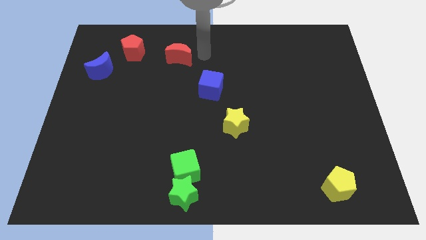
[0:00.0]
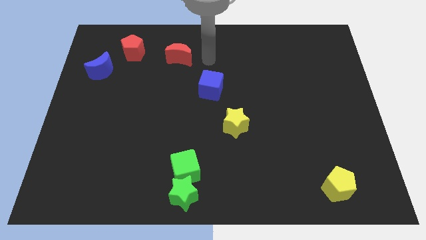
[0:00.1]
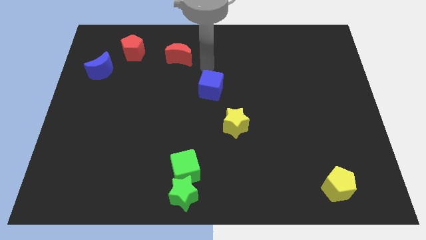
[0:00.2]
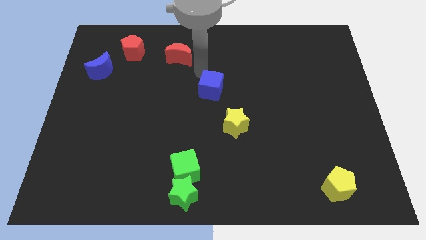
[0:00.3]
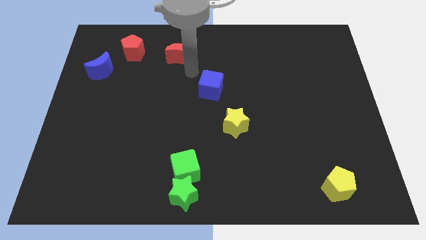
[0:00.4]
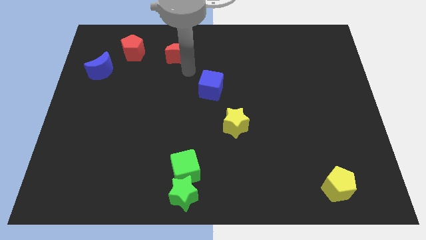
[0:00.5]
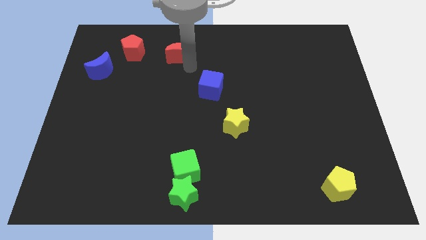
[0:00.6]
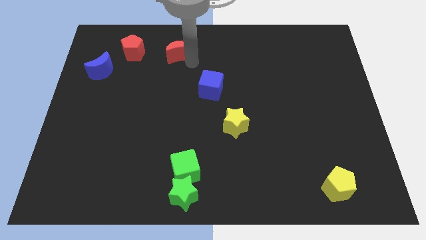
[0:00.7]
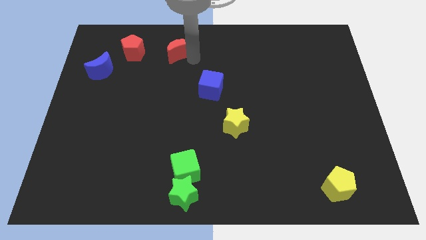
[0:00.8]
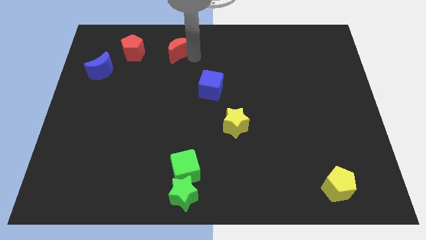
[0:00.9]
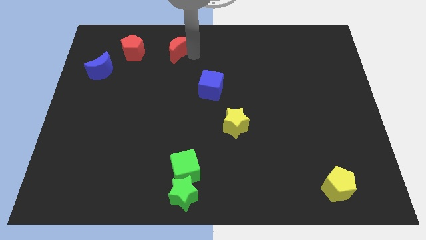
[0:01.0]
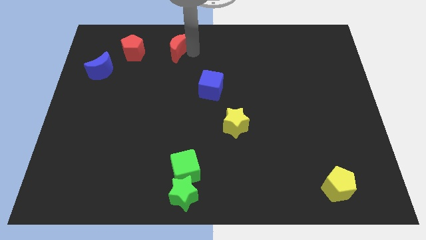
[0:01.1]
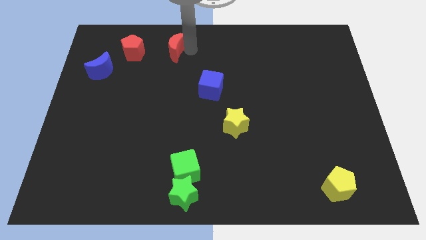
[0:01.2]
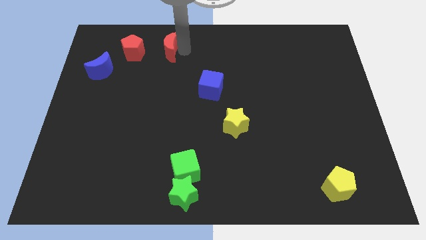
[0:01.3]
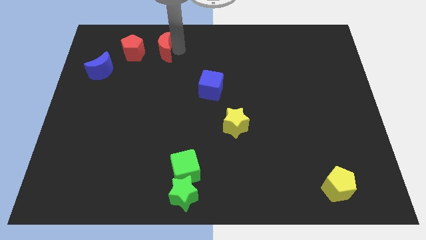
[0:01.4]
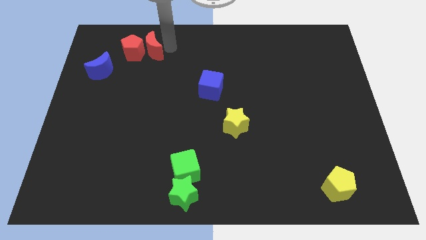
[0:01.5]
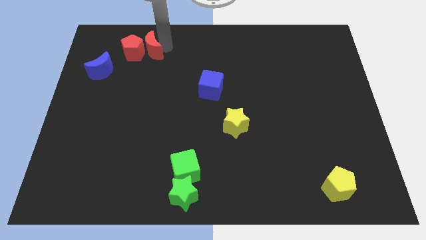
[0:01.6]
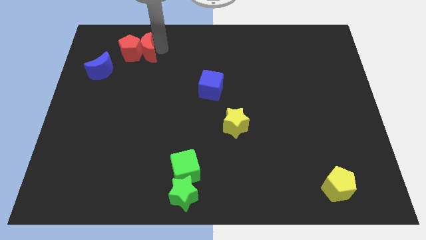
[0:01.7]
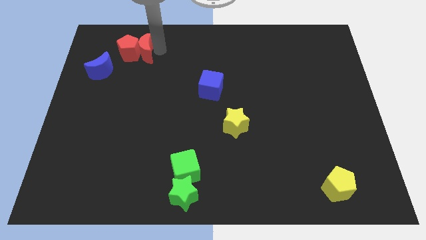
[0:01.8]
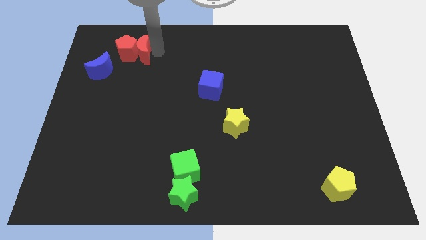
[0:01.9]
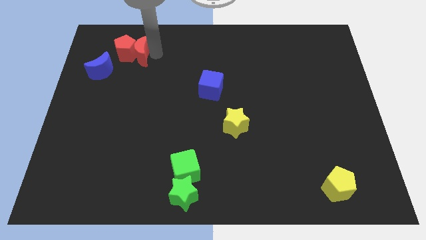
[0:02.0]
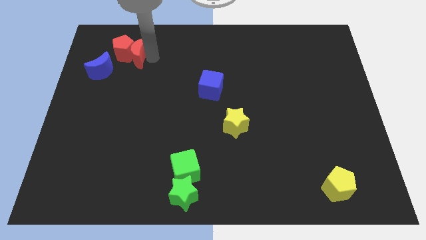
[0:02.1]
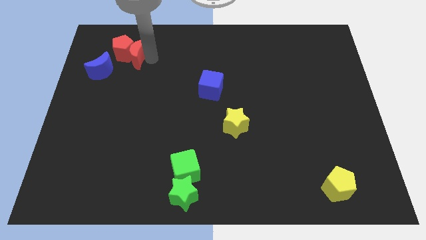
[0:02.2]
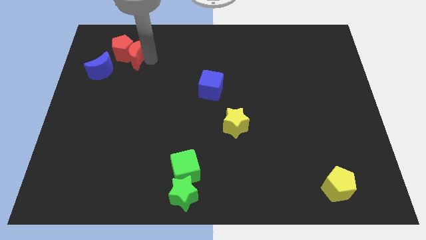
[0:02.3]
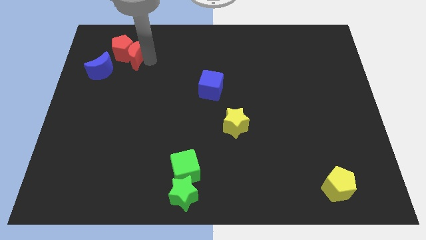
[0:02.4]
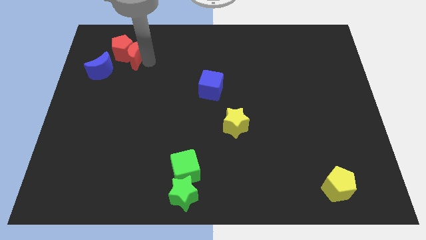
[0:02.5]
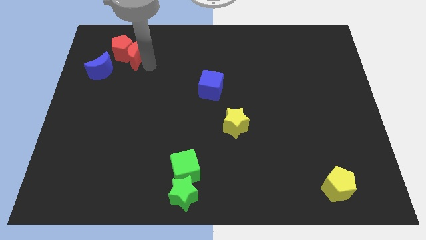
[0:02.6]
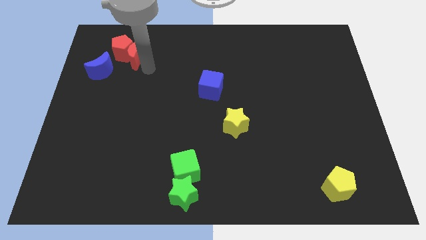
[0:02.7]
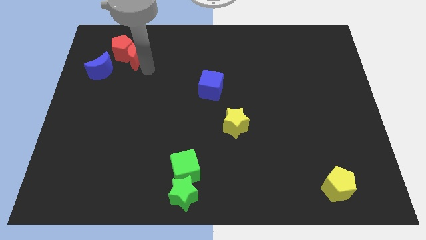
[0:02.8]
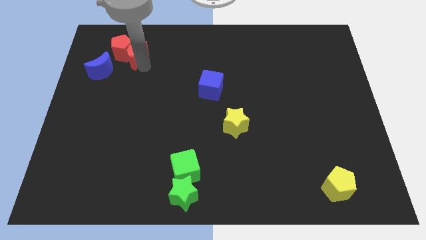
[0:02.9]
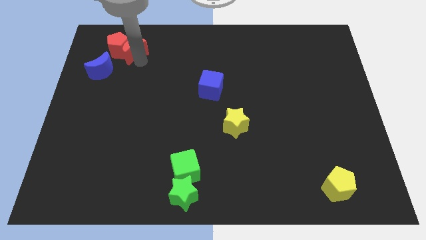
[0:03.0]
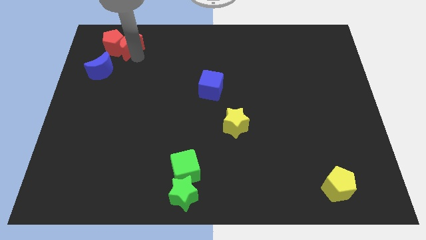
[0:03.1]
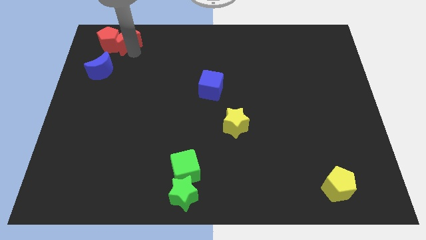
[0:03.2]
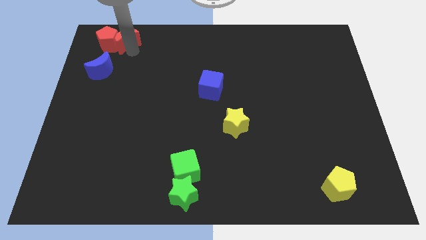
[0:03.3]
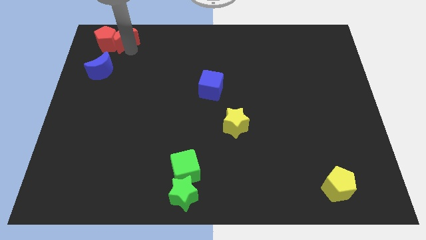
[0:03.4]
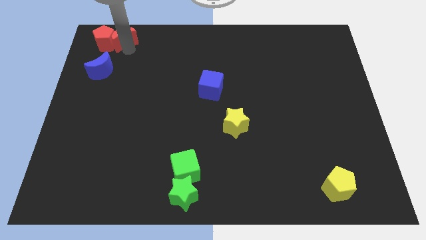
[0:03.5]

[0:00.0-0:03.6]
push the red moon with red pentagon towards top left side

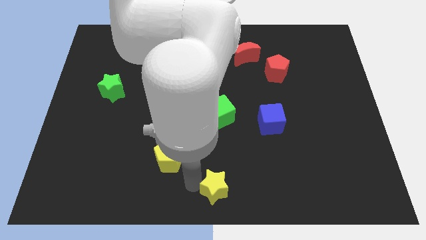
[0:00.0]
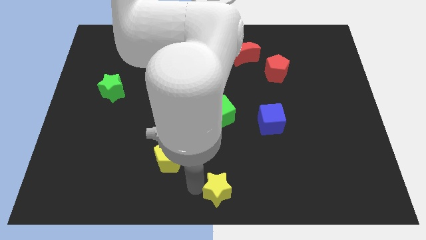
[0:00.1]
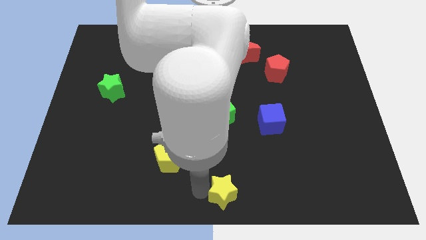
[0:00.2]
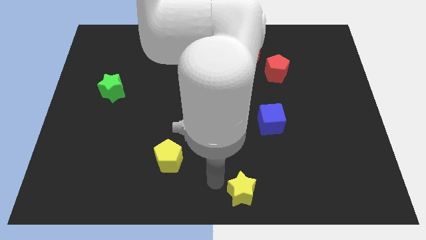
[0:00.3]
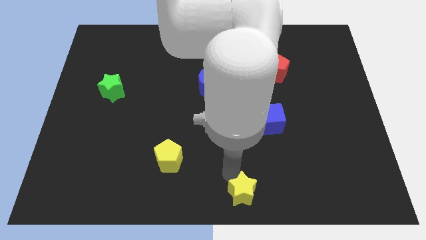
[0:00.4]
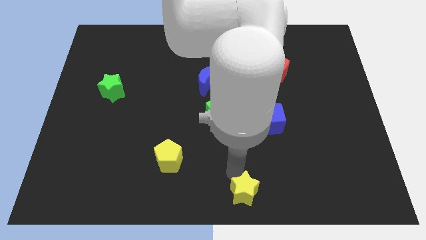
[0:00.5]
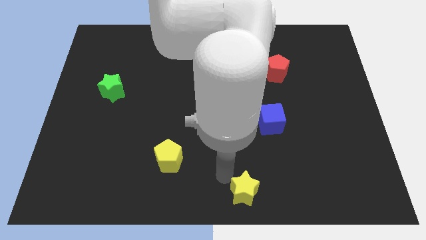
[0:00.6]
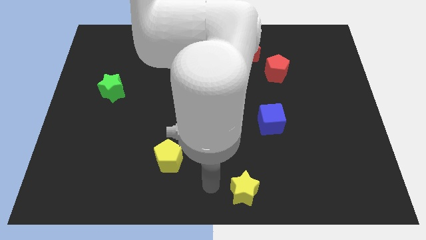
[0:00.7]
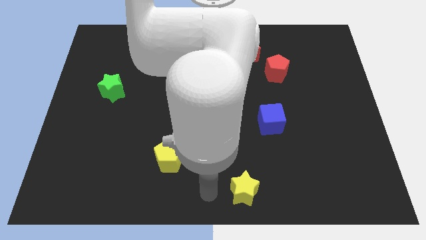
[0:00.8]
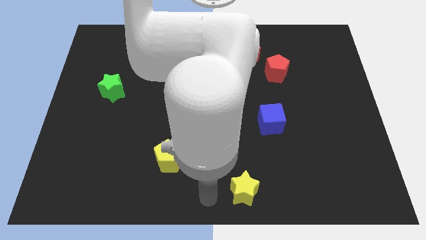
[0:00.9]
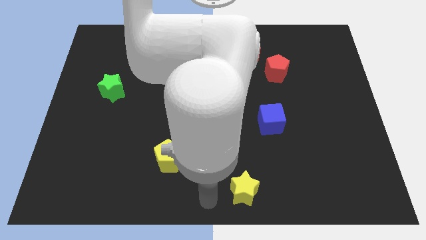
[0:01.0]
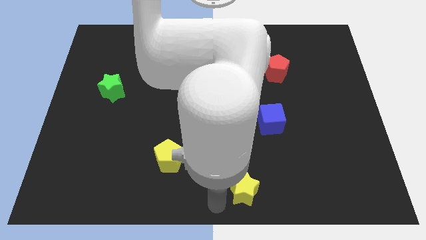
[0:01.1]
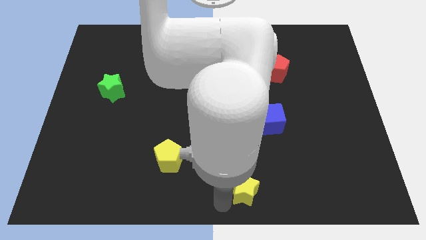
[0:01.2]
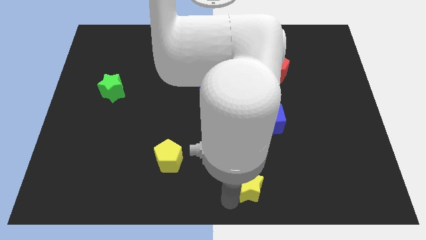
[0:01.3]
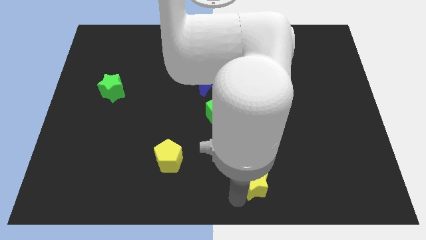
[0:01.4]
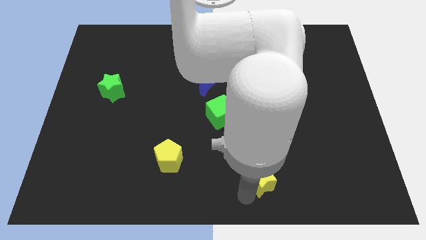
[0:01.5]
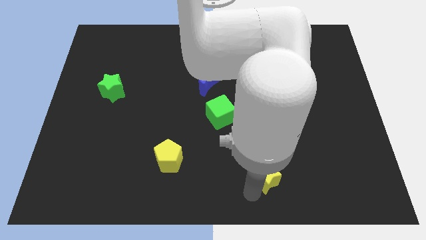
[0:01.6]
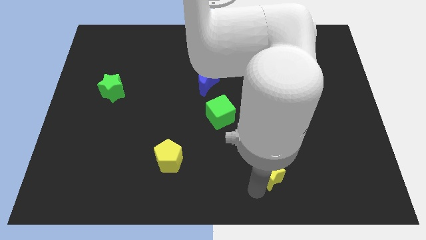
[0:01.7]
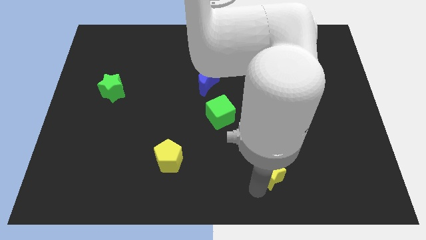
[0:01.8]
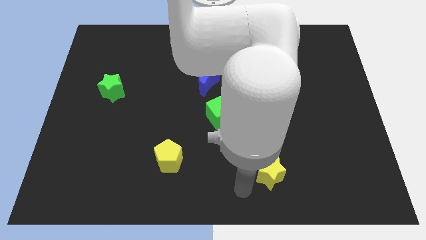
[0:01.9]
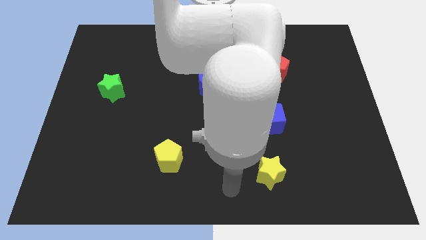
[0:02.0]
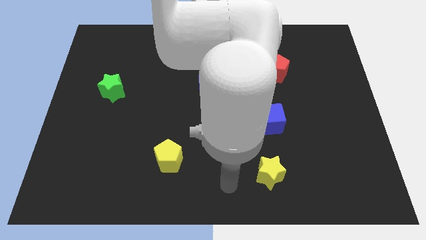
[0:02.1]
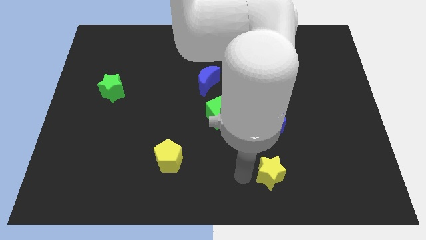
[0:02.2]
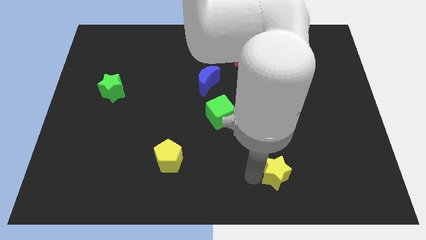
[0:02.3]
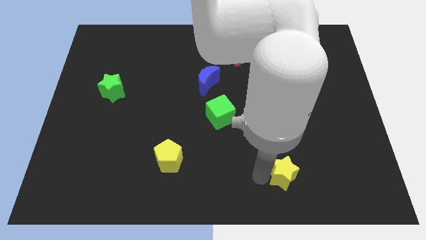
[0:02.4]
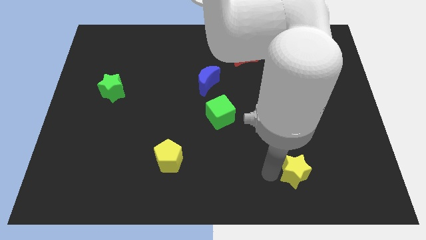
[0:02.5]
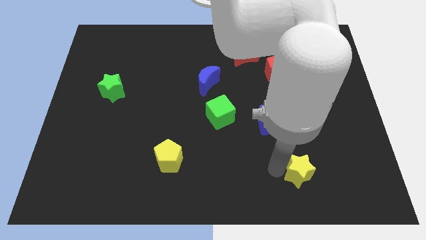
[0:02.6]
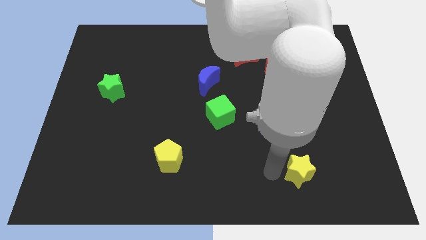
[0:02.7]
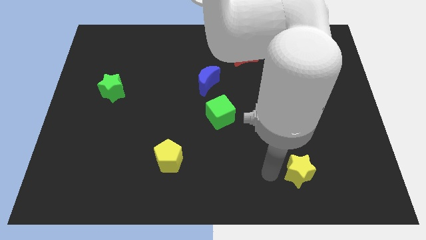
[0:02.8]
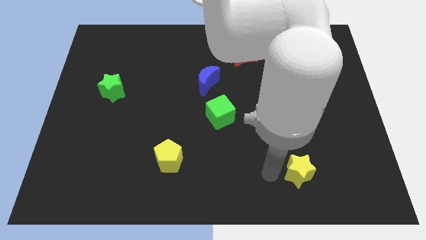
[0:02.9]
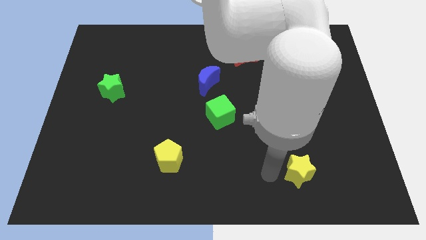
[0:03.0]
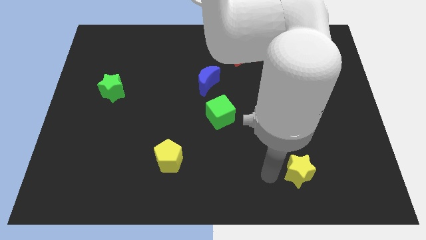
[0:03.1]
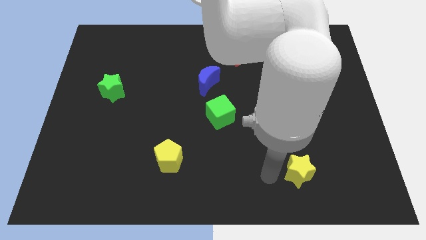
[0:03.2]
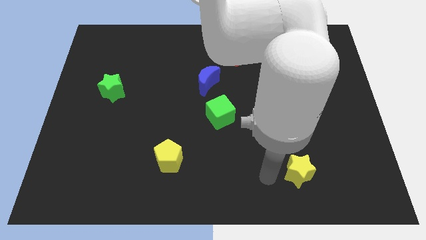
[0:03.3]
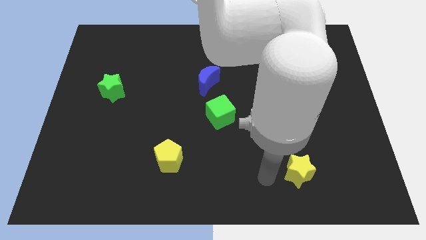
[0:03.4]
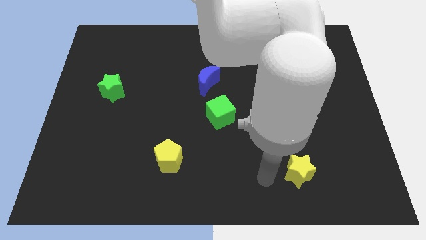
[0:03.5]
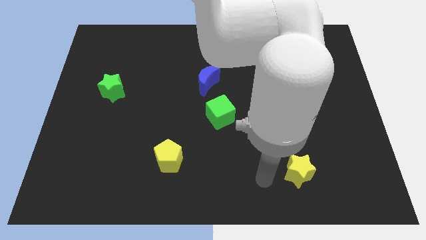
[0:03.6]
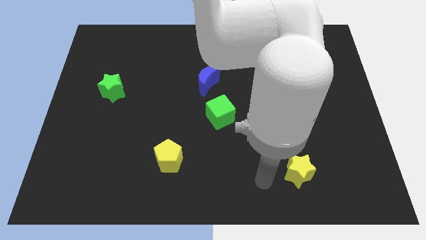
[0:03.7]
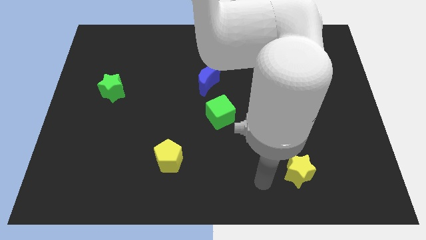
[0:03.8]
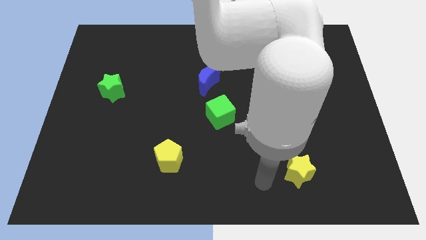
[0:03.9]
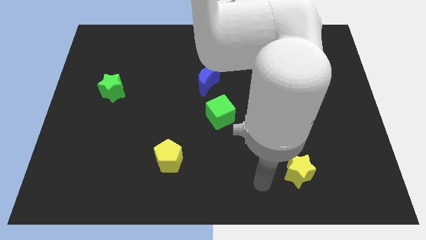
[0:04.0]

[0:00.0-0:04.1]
slide yellow star to the right of yellow pentagon

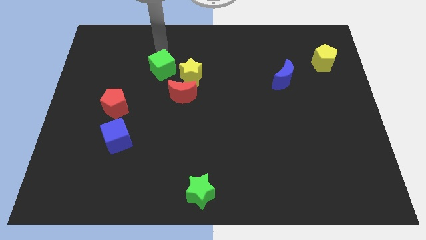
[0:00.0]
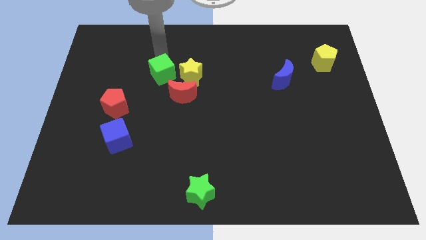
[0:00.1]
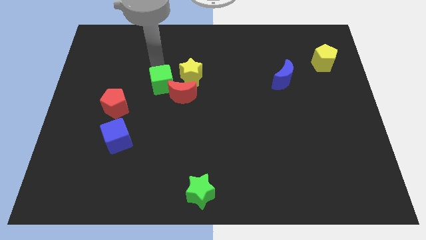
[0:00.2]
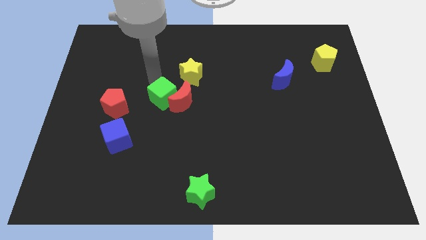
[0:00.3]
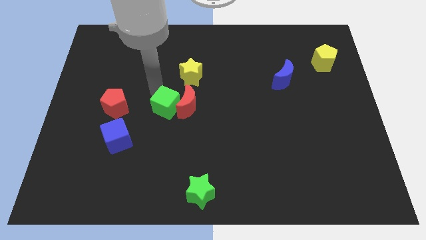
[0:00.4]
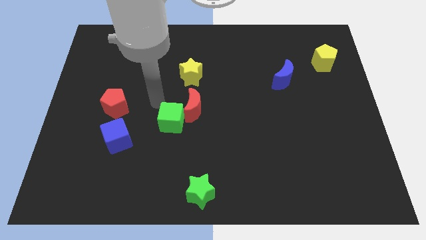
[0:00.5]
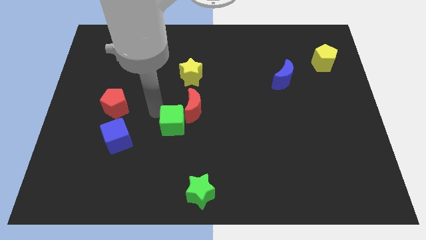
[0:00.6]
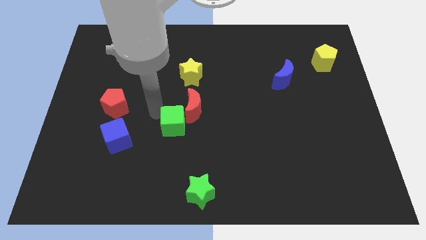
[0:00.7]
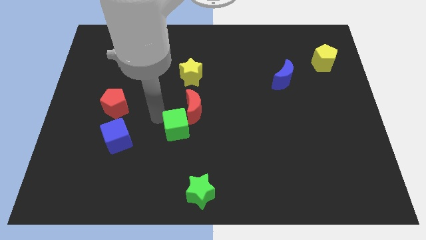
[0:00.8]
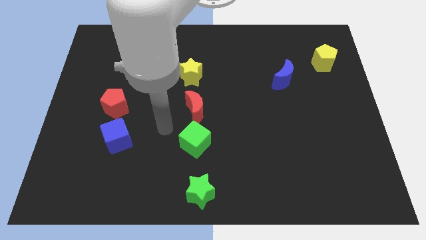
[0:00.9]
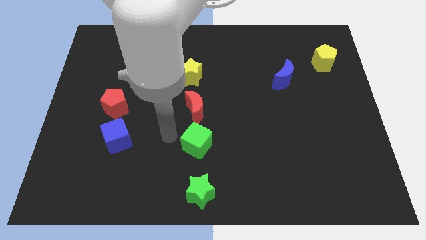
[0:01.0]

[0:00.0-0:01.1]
put the green cube at the bottom side of the red crescent

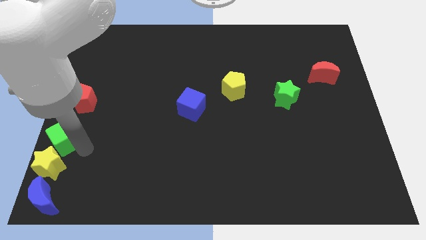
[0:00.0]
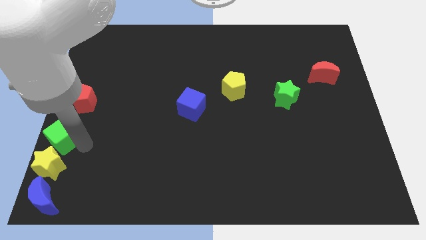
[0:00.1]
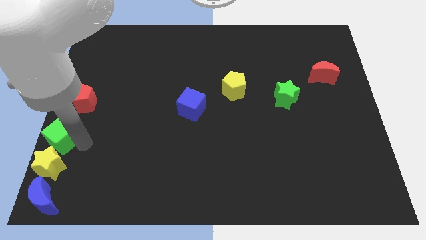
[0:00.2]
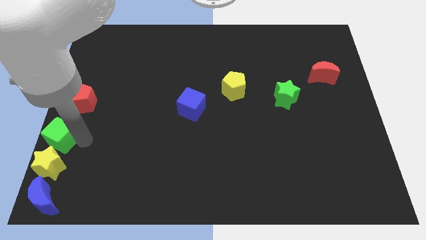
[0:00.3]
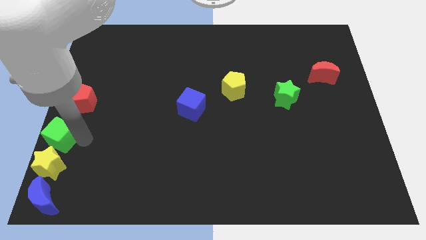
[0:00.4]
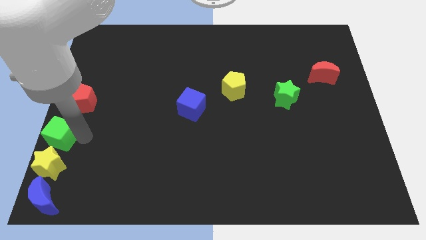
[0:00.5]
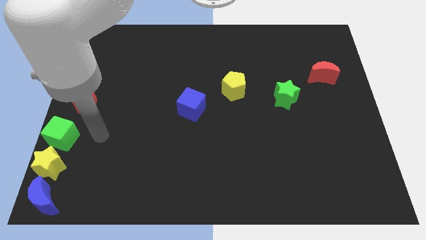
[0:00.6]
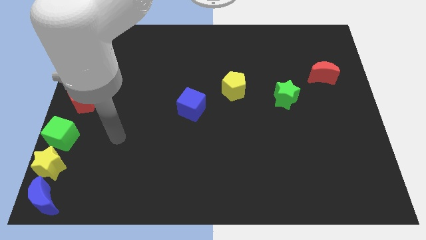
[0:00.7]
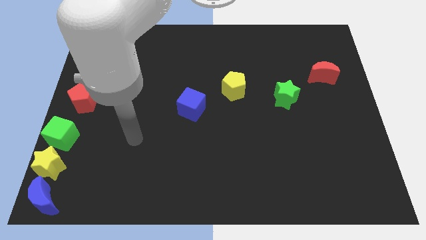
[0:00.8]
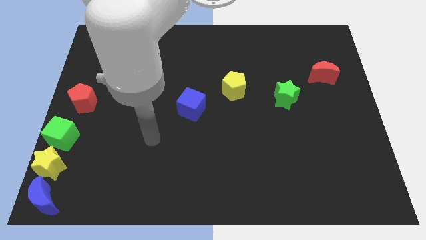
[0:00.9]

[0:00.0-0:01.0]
place the green cube in between the yellow star and red pentagon
